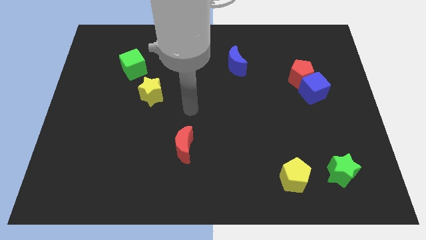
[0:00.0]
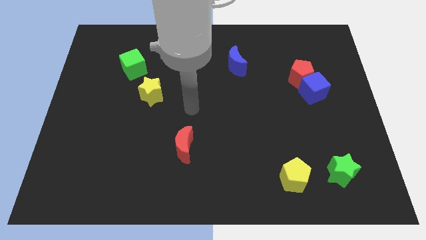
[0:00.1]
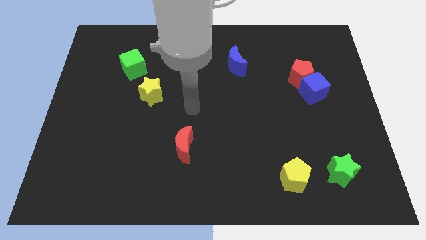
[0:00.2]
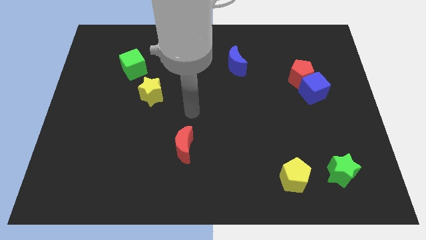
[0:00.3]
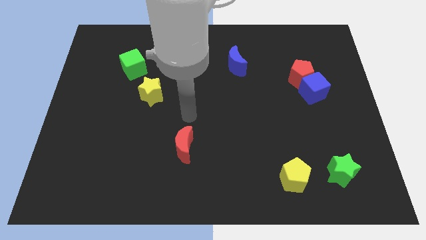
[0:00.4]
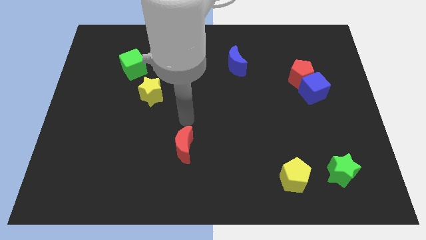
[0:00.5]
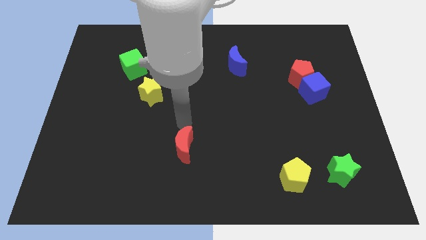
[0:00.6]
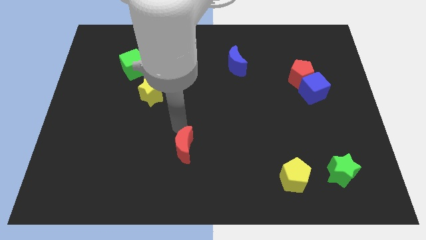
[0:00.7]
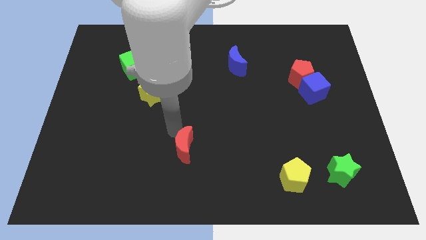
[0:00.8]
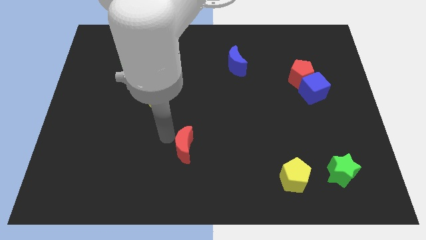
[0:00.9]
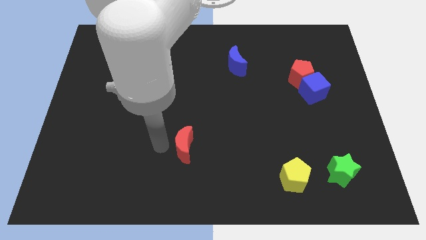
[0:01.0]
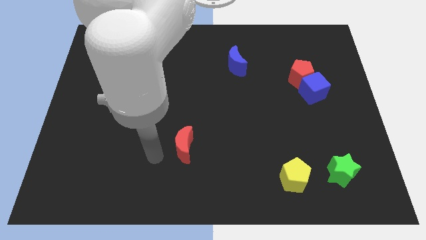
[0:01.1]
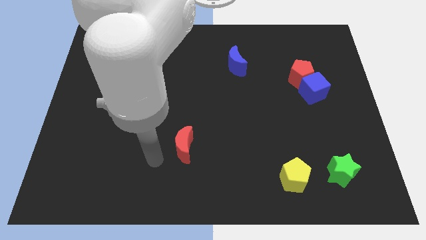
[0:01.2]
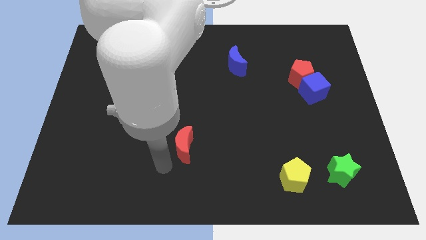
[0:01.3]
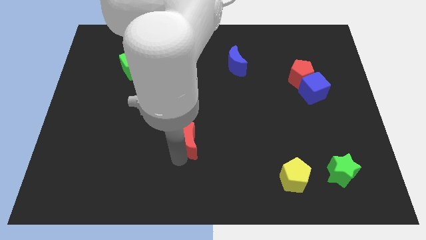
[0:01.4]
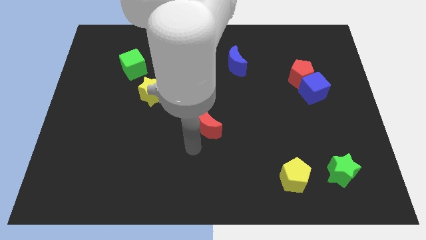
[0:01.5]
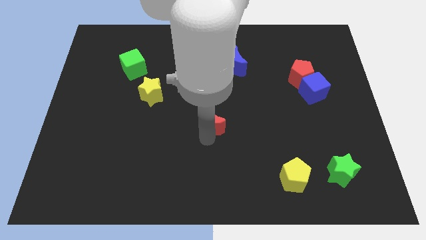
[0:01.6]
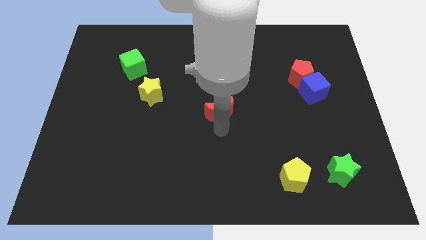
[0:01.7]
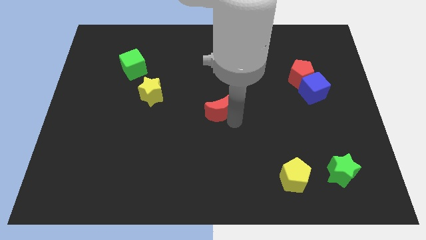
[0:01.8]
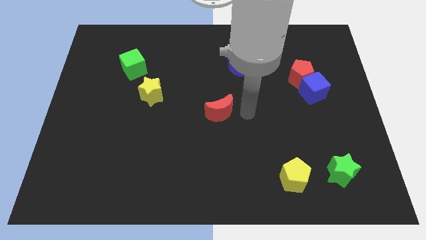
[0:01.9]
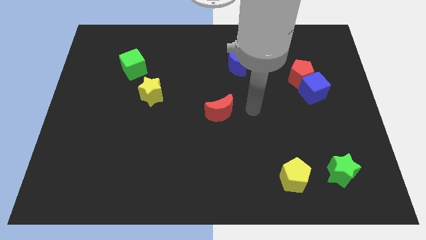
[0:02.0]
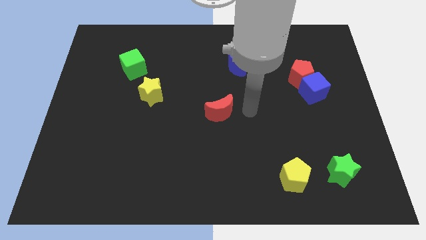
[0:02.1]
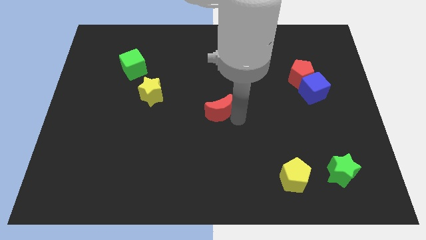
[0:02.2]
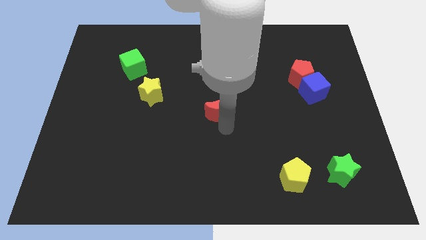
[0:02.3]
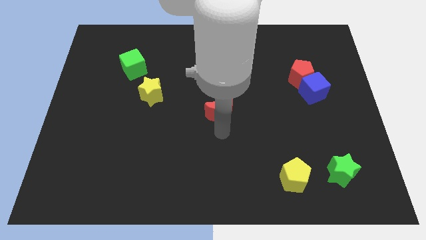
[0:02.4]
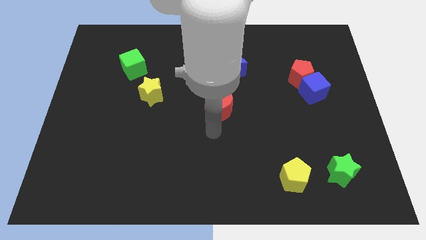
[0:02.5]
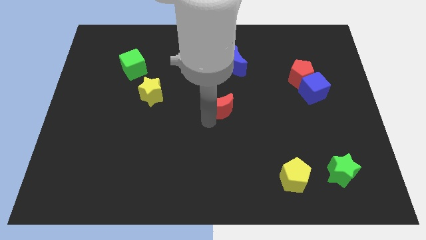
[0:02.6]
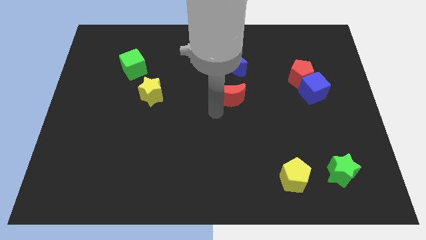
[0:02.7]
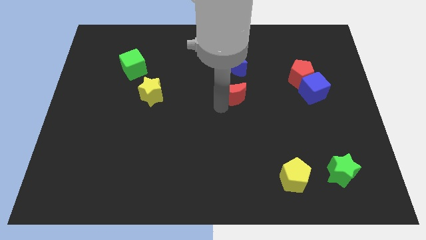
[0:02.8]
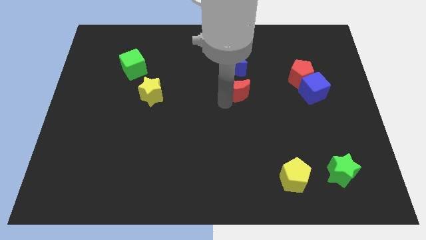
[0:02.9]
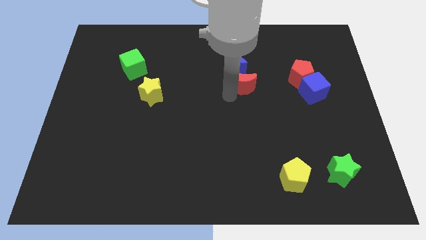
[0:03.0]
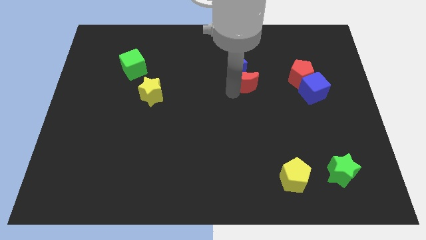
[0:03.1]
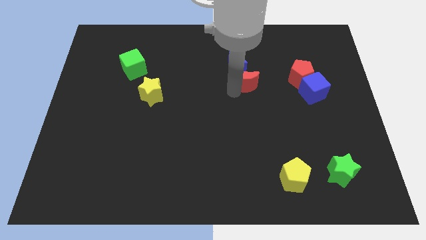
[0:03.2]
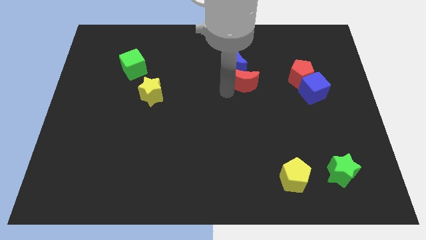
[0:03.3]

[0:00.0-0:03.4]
move the red moon parallel to the red pentagon

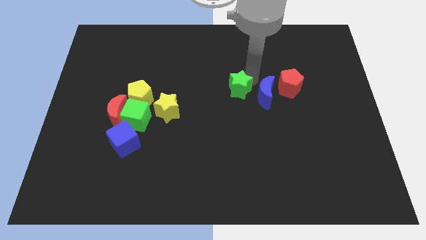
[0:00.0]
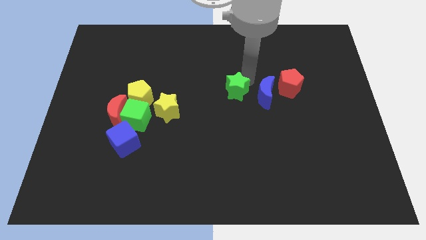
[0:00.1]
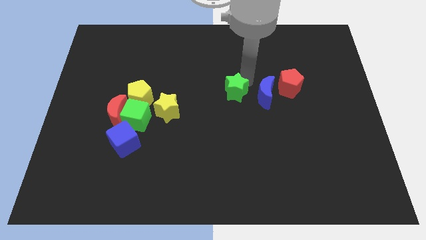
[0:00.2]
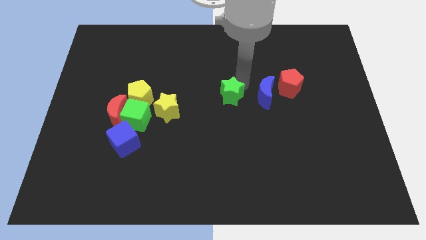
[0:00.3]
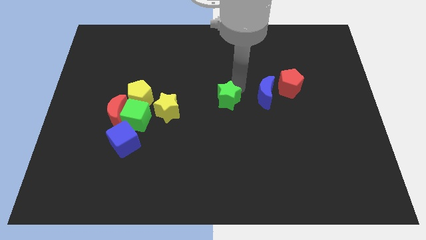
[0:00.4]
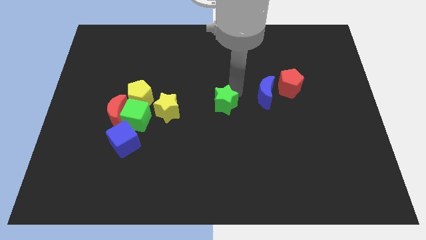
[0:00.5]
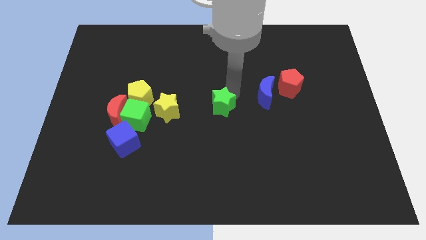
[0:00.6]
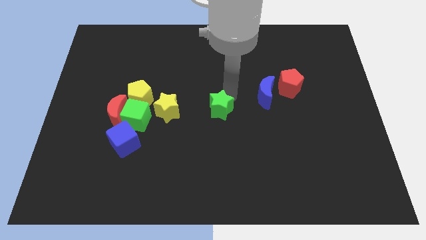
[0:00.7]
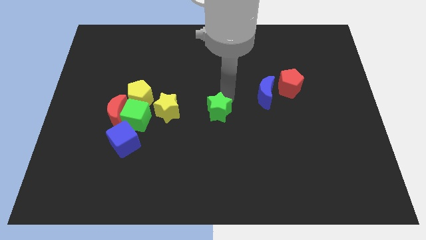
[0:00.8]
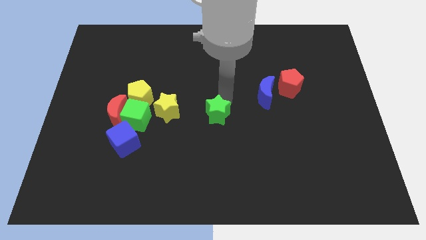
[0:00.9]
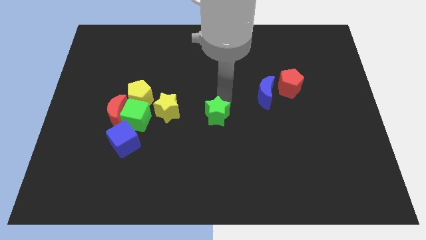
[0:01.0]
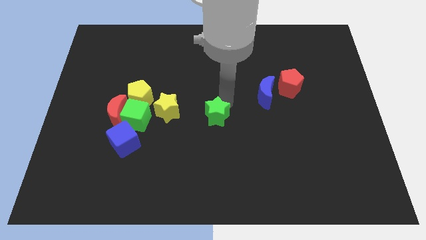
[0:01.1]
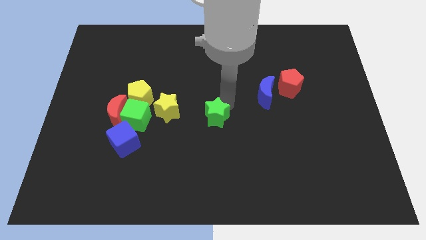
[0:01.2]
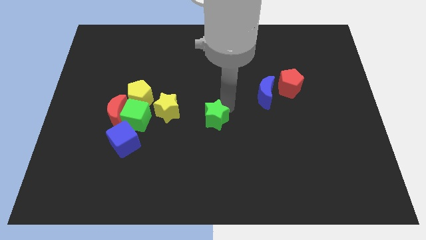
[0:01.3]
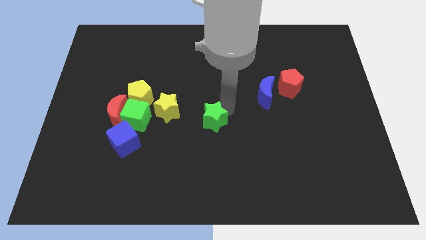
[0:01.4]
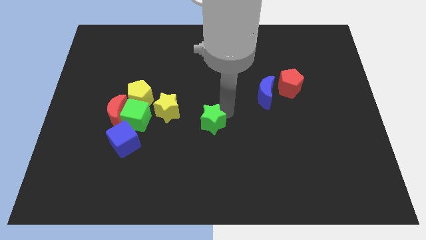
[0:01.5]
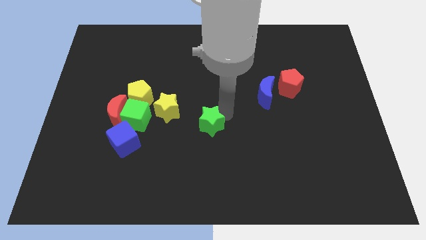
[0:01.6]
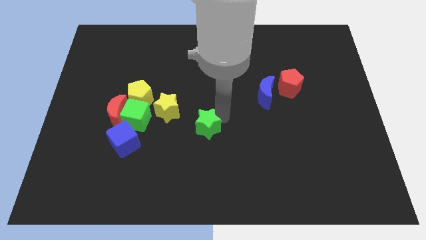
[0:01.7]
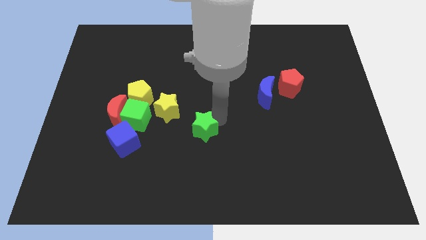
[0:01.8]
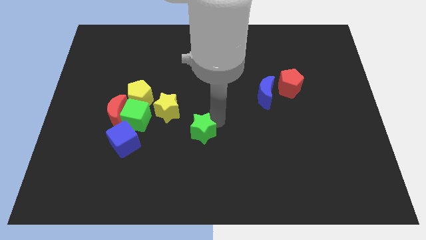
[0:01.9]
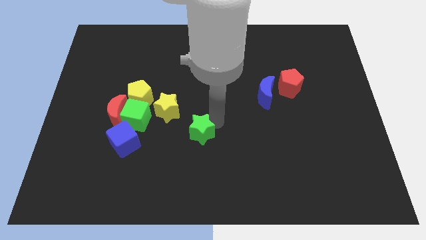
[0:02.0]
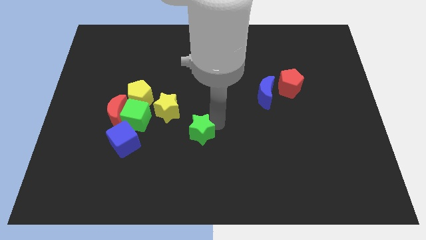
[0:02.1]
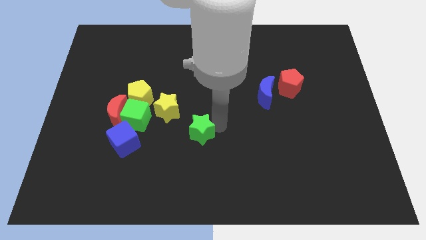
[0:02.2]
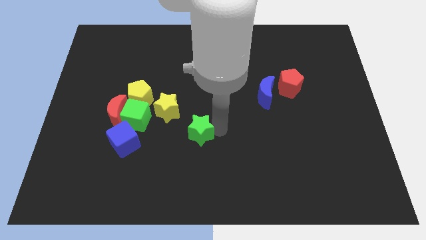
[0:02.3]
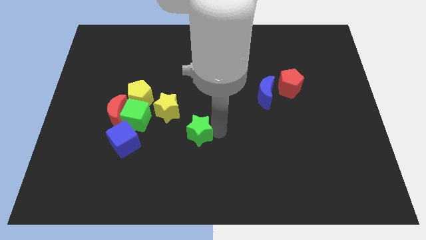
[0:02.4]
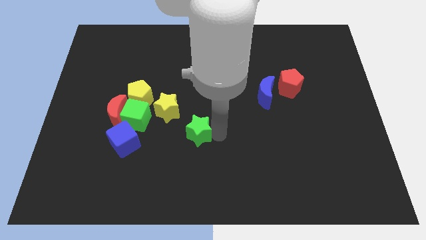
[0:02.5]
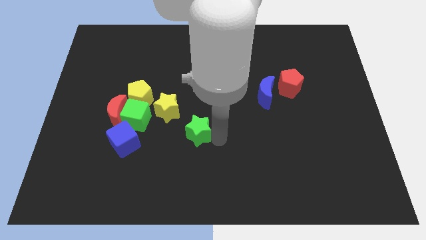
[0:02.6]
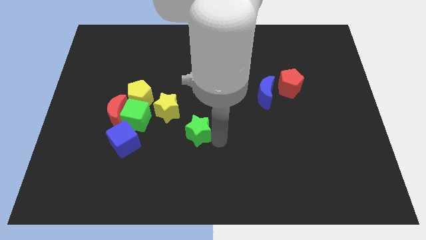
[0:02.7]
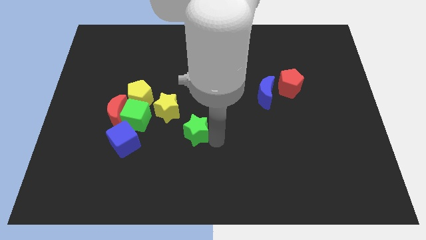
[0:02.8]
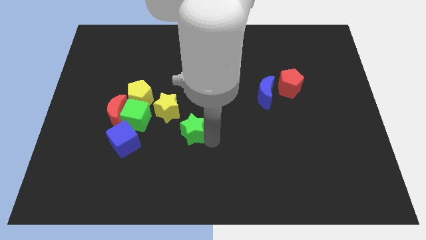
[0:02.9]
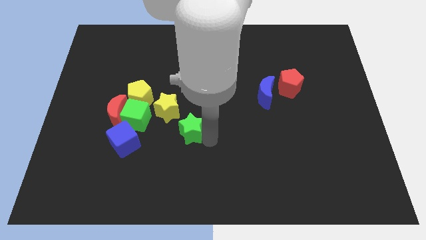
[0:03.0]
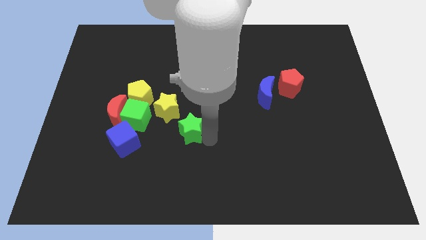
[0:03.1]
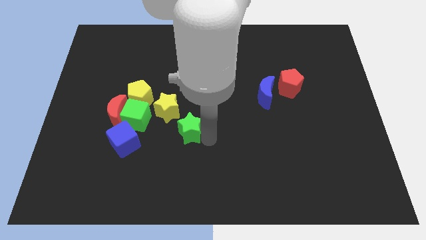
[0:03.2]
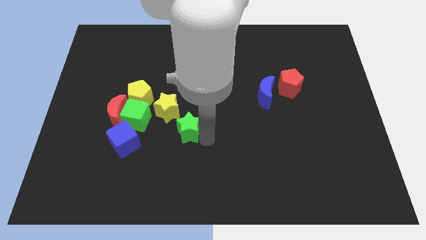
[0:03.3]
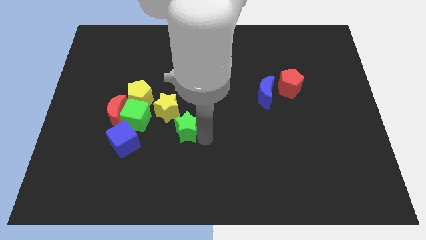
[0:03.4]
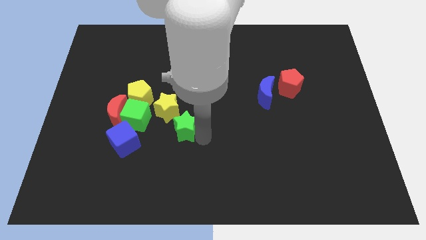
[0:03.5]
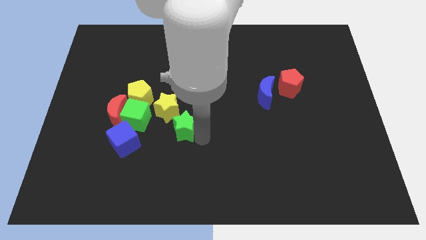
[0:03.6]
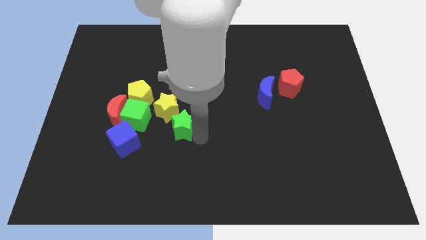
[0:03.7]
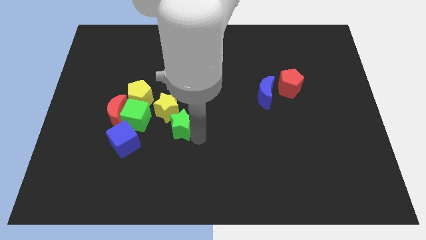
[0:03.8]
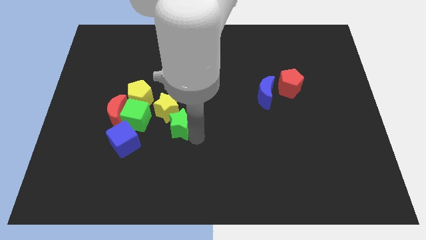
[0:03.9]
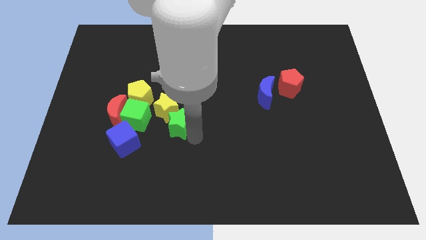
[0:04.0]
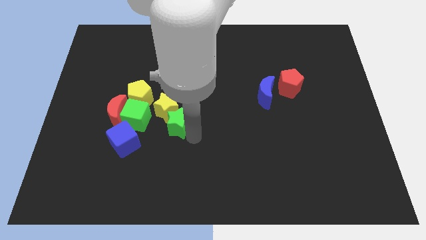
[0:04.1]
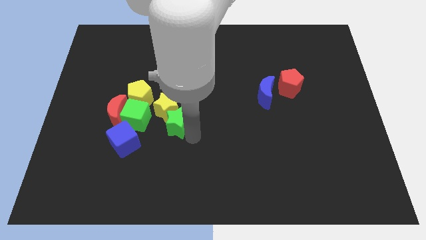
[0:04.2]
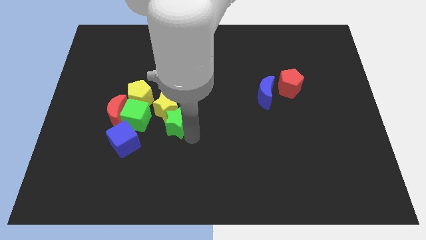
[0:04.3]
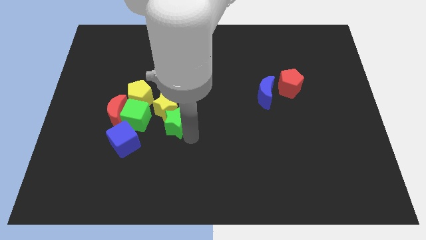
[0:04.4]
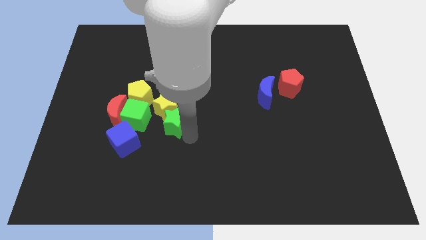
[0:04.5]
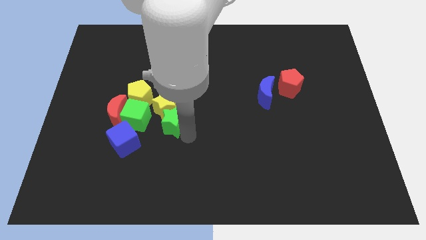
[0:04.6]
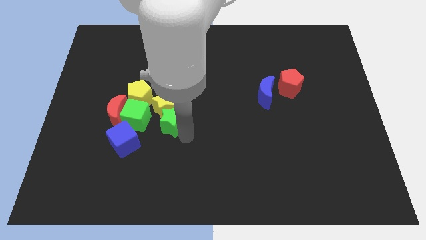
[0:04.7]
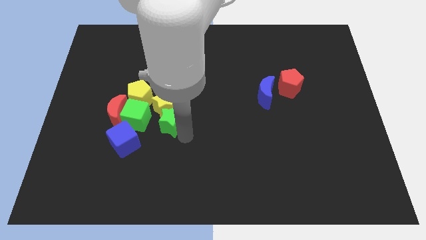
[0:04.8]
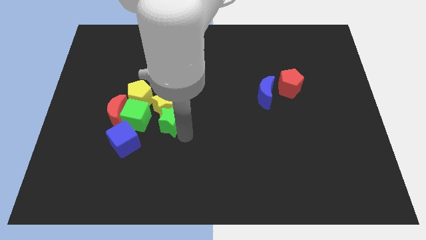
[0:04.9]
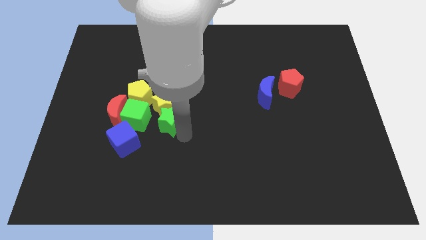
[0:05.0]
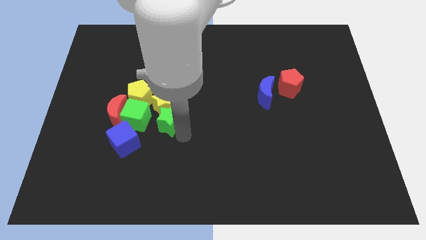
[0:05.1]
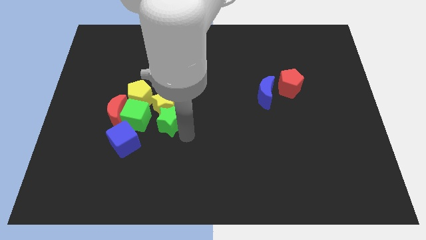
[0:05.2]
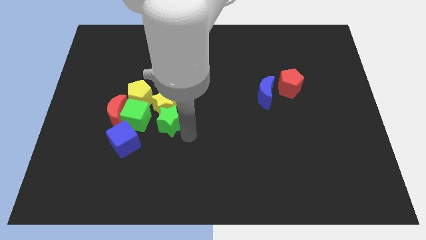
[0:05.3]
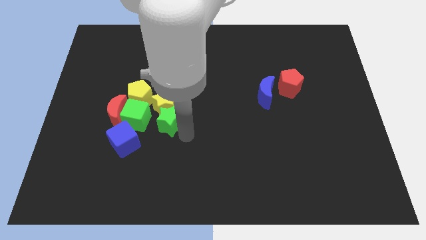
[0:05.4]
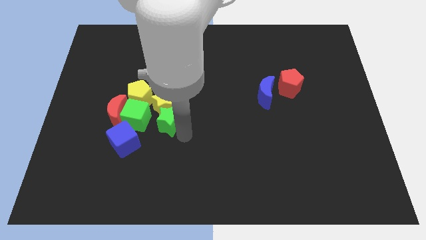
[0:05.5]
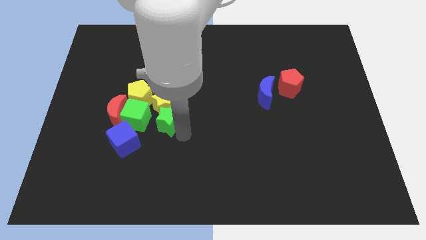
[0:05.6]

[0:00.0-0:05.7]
place the green star below the yellow star
